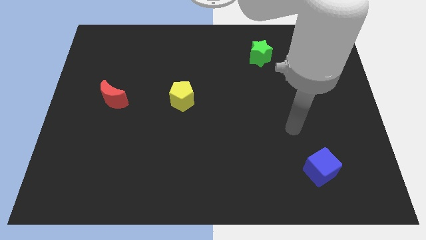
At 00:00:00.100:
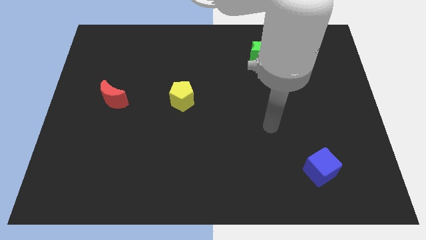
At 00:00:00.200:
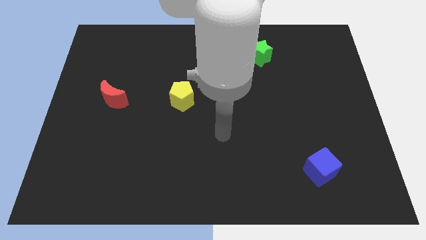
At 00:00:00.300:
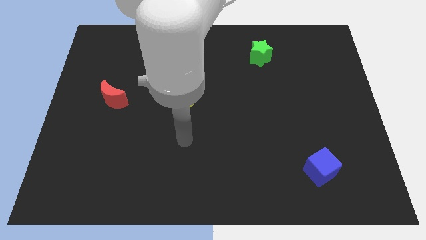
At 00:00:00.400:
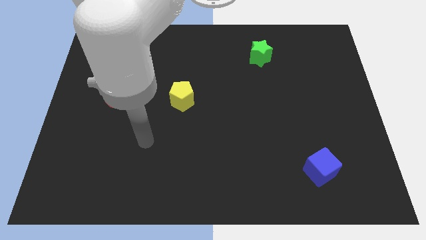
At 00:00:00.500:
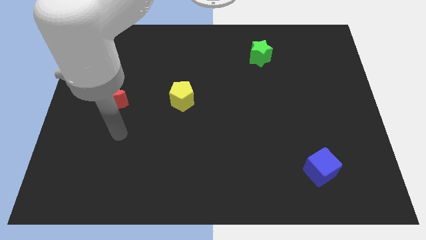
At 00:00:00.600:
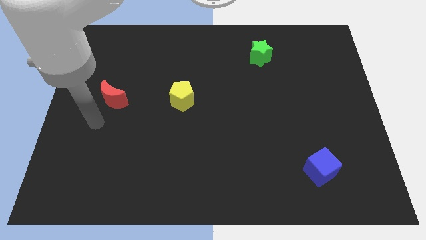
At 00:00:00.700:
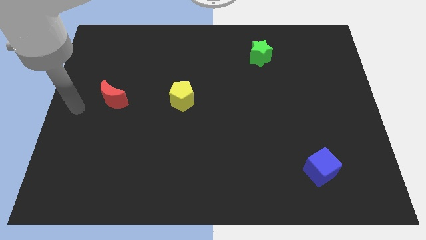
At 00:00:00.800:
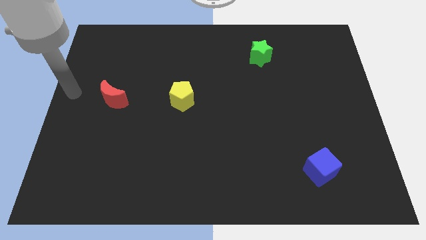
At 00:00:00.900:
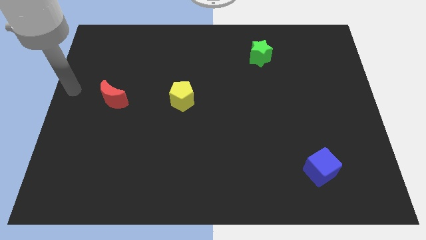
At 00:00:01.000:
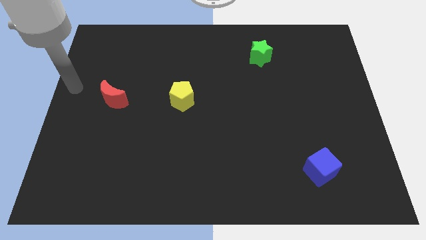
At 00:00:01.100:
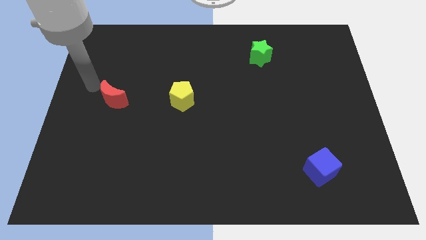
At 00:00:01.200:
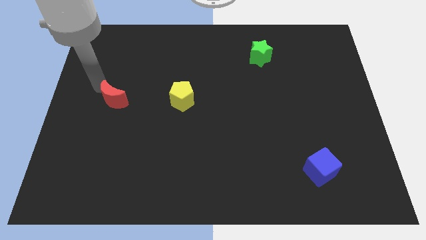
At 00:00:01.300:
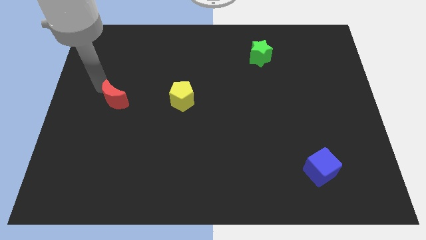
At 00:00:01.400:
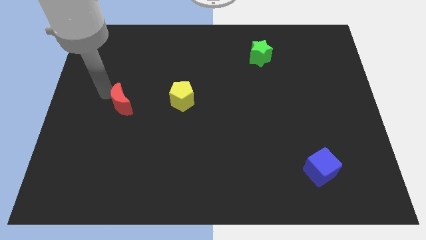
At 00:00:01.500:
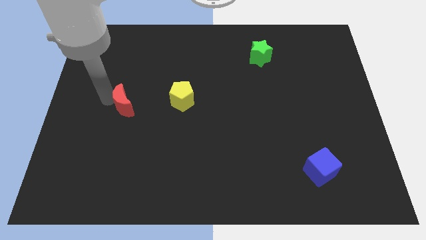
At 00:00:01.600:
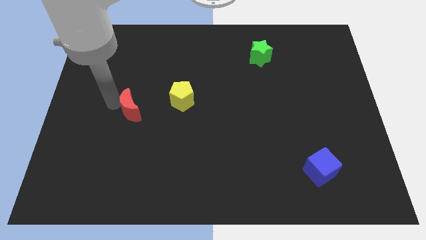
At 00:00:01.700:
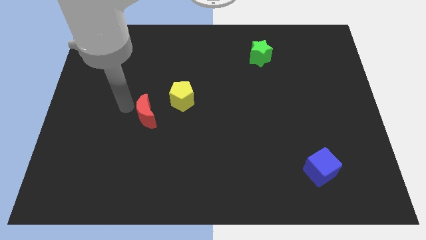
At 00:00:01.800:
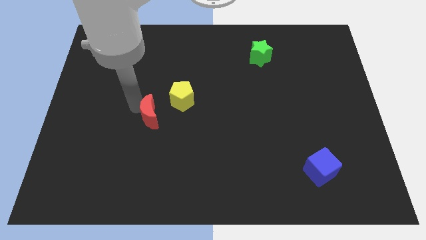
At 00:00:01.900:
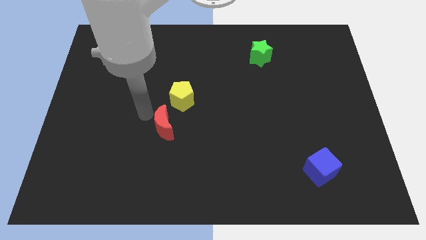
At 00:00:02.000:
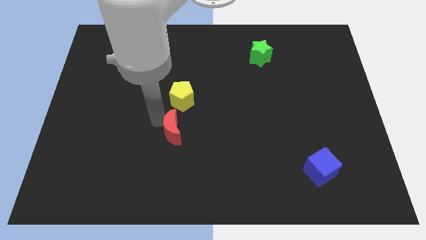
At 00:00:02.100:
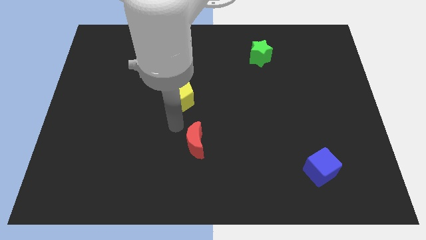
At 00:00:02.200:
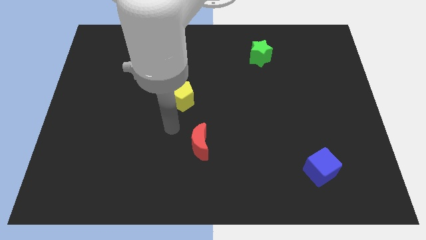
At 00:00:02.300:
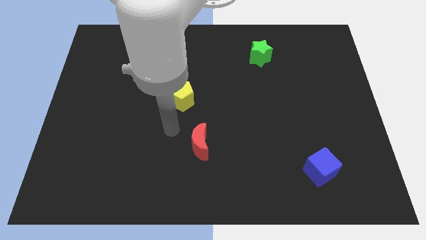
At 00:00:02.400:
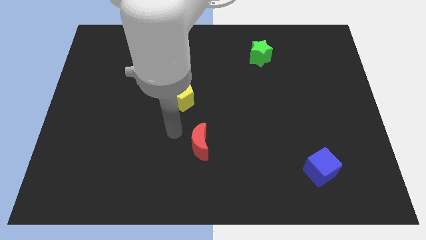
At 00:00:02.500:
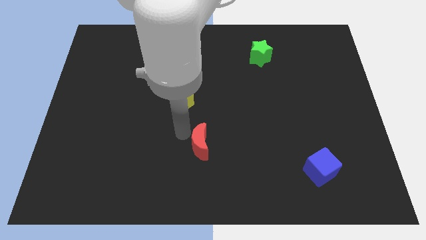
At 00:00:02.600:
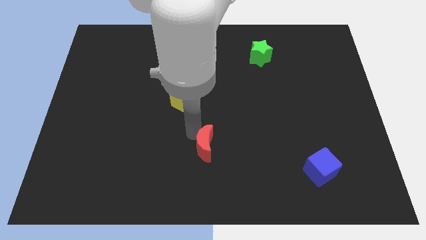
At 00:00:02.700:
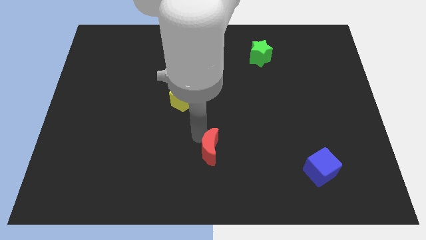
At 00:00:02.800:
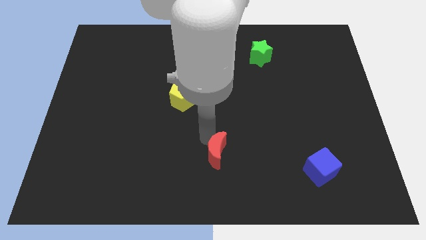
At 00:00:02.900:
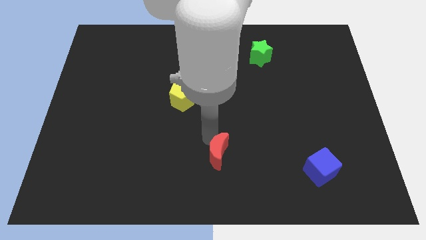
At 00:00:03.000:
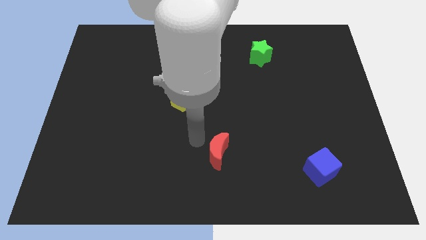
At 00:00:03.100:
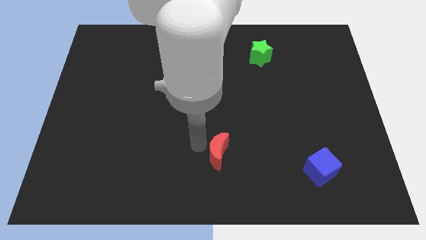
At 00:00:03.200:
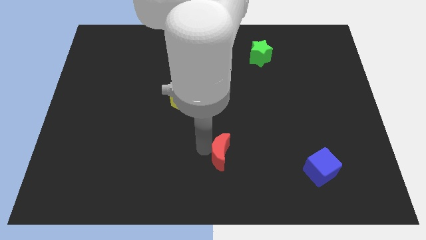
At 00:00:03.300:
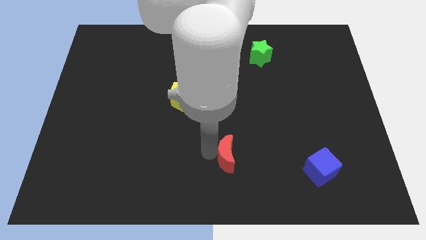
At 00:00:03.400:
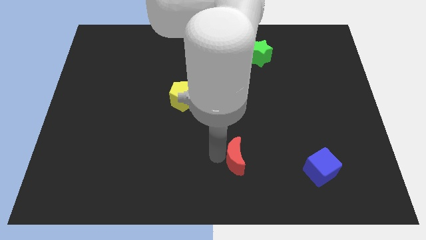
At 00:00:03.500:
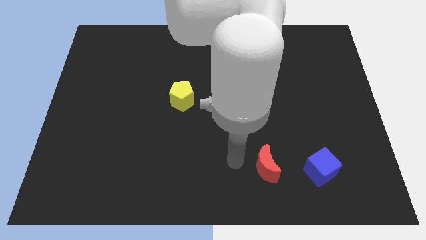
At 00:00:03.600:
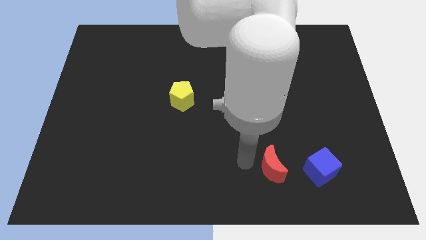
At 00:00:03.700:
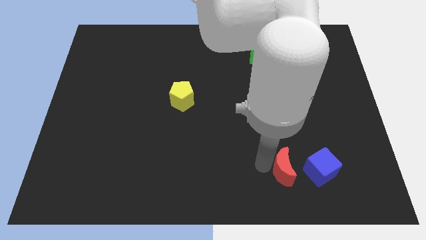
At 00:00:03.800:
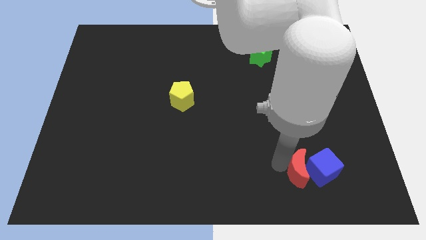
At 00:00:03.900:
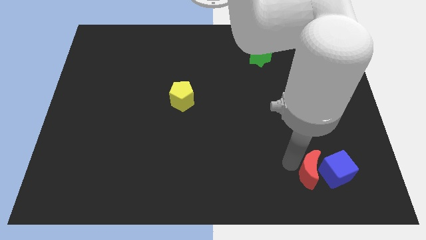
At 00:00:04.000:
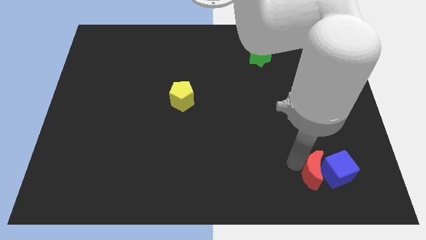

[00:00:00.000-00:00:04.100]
slide the red moon to the blue cube

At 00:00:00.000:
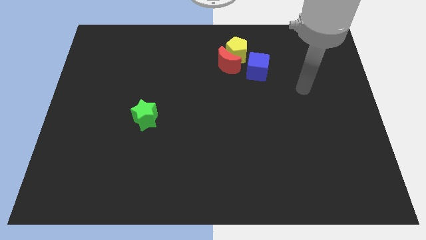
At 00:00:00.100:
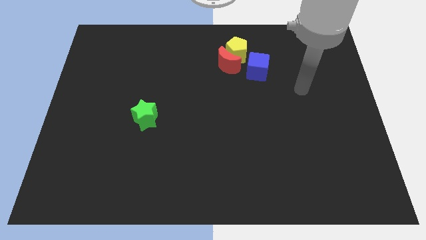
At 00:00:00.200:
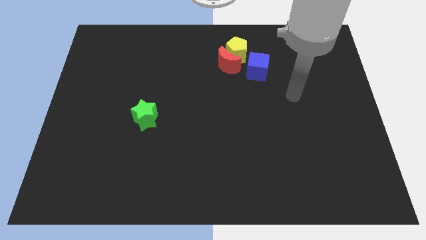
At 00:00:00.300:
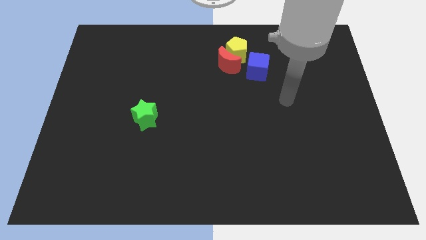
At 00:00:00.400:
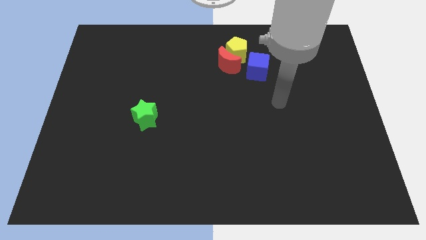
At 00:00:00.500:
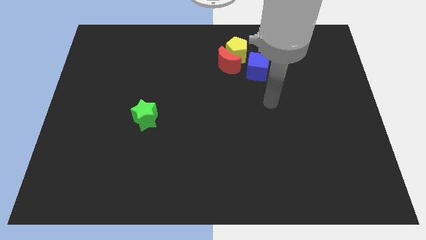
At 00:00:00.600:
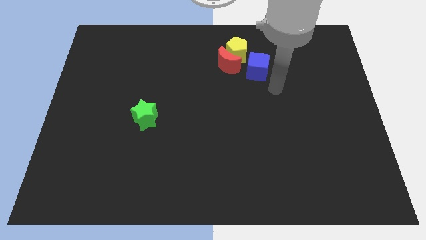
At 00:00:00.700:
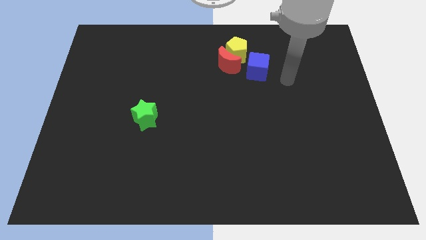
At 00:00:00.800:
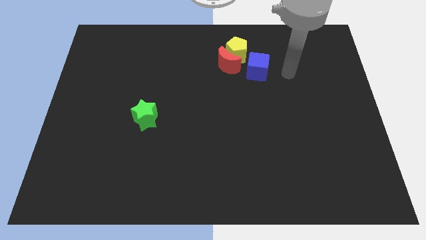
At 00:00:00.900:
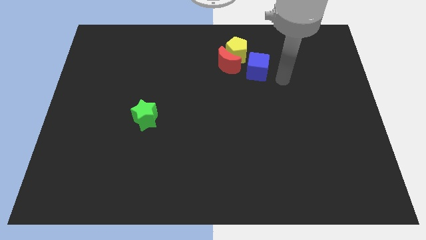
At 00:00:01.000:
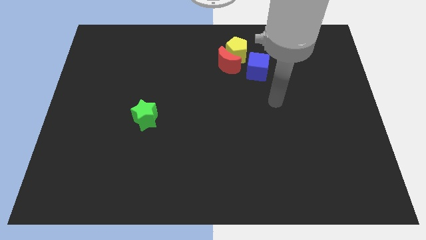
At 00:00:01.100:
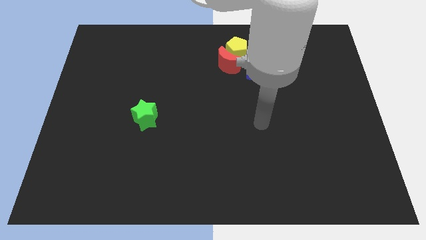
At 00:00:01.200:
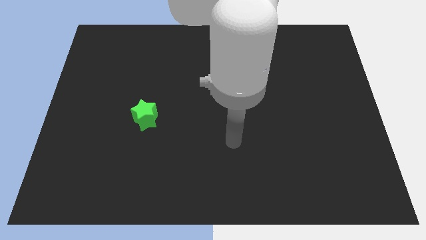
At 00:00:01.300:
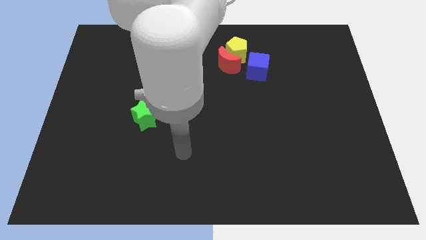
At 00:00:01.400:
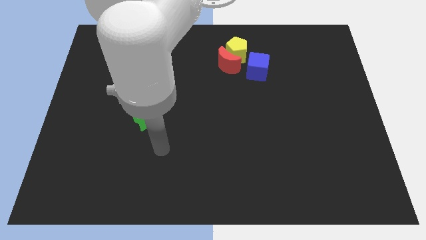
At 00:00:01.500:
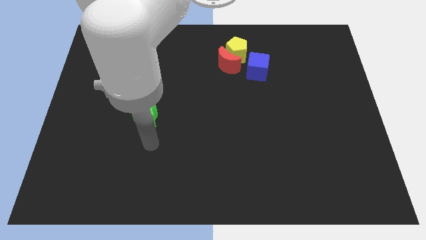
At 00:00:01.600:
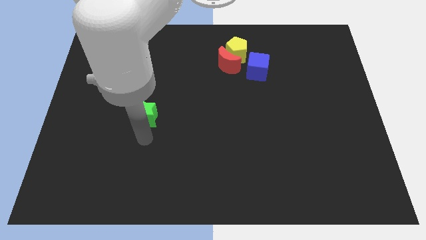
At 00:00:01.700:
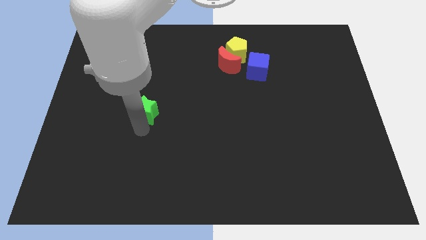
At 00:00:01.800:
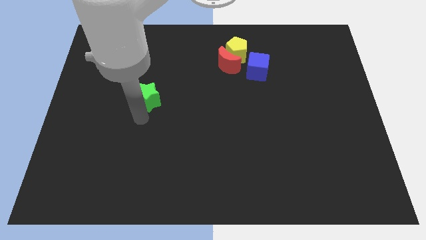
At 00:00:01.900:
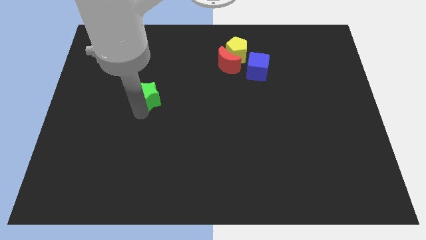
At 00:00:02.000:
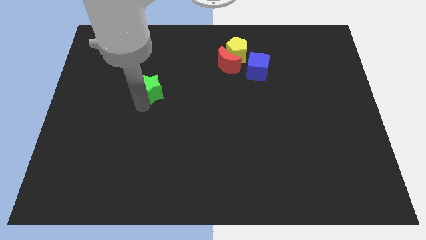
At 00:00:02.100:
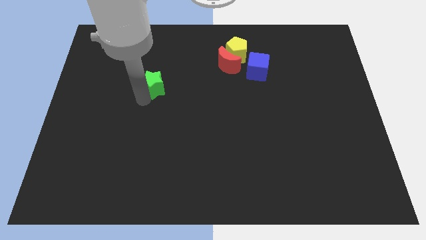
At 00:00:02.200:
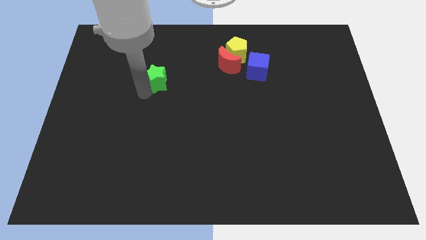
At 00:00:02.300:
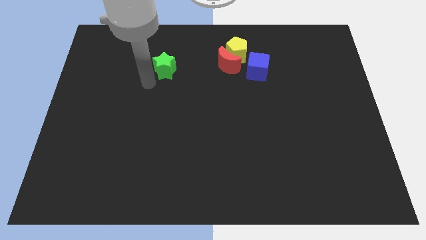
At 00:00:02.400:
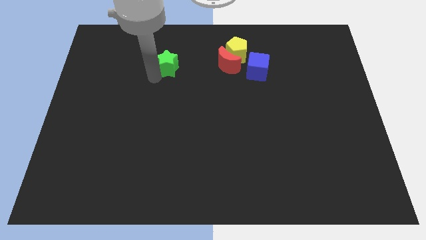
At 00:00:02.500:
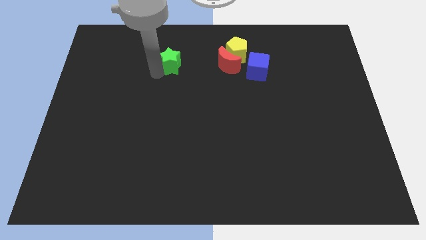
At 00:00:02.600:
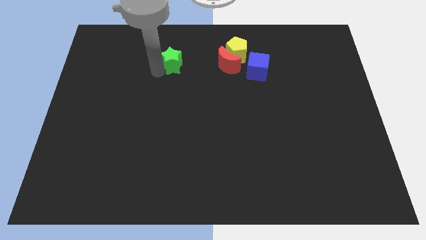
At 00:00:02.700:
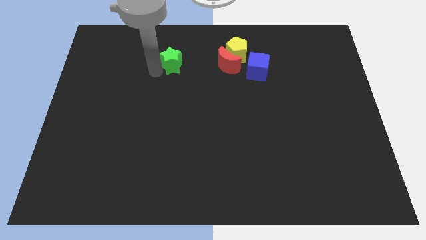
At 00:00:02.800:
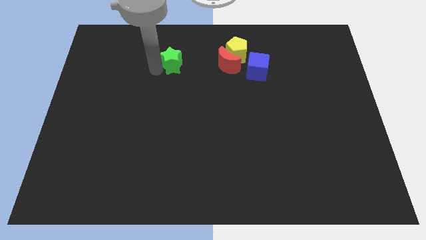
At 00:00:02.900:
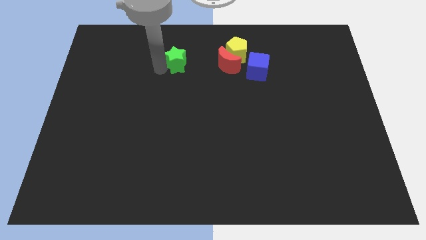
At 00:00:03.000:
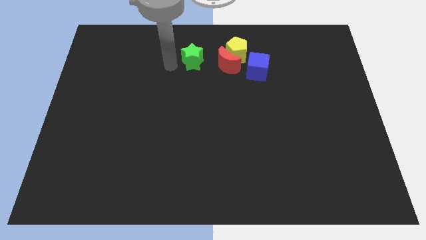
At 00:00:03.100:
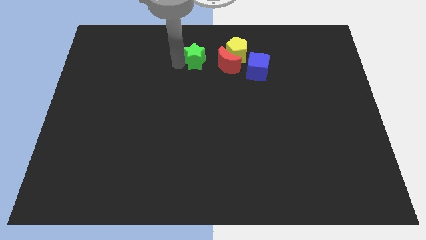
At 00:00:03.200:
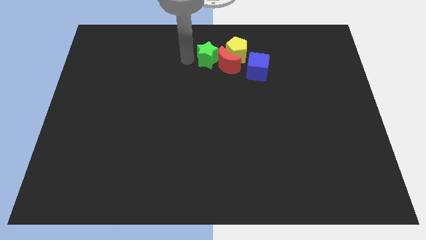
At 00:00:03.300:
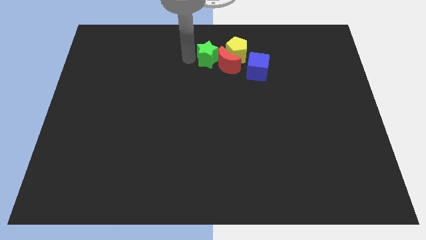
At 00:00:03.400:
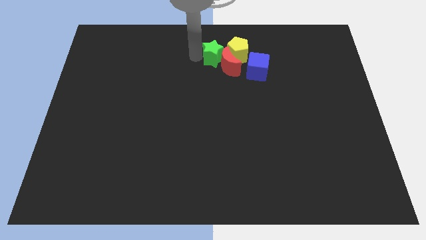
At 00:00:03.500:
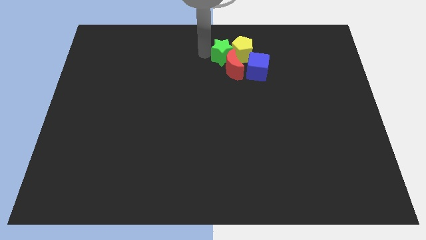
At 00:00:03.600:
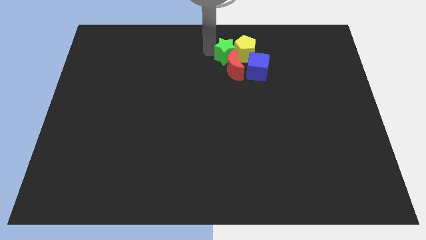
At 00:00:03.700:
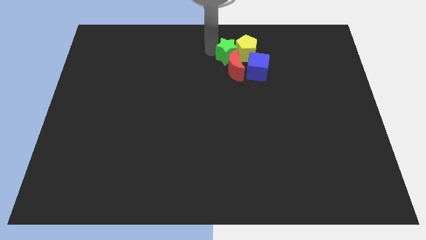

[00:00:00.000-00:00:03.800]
put the green block close to the pentagon

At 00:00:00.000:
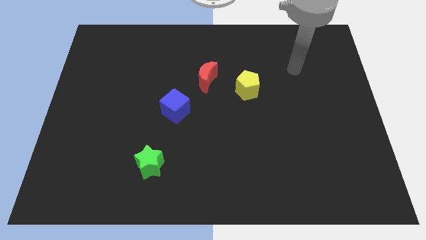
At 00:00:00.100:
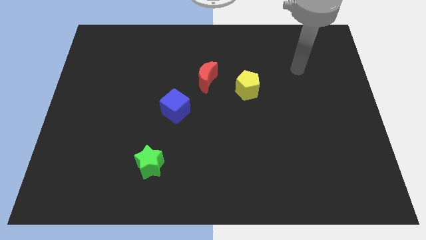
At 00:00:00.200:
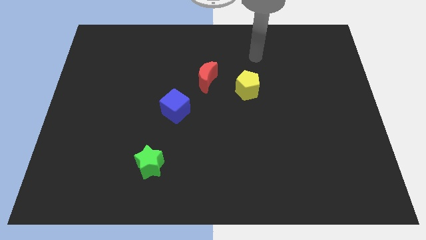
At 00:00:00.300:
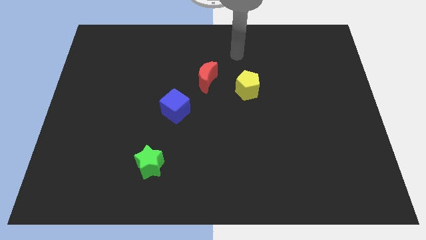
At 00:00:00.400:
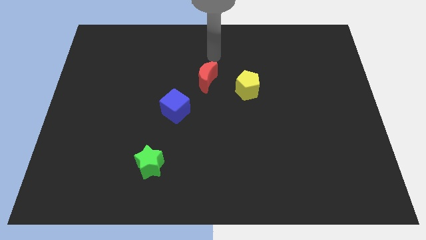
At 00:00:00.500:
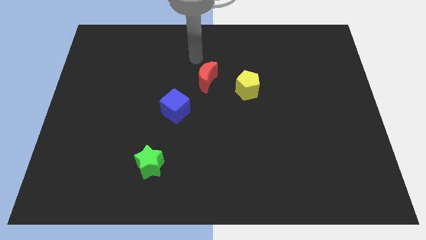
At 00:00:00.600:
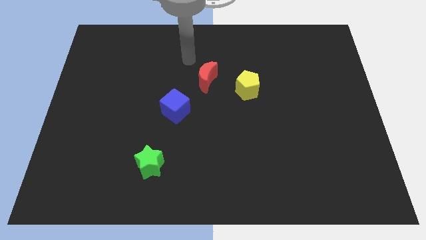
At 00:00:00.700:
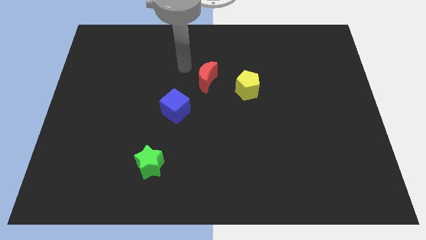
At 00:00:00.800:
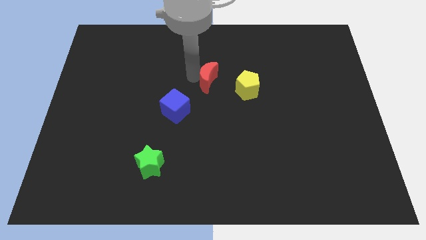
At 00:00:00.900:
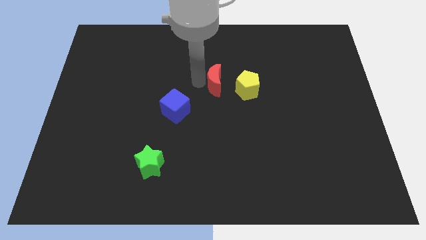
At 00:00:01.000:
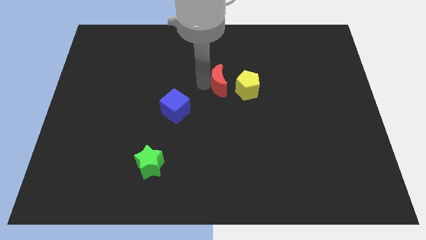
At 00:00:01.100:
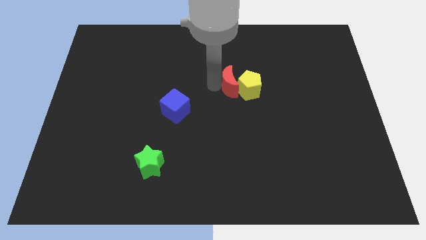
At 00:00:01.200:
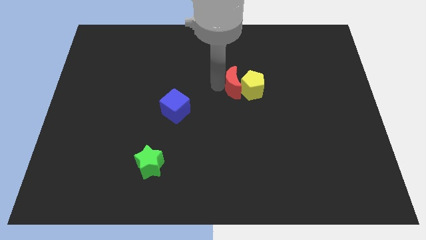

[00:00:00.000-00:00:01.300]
slide the moon next to the yellow block
